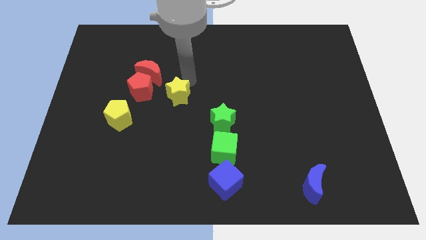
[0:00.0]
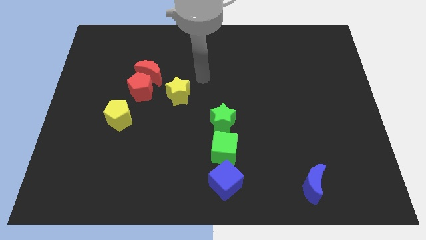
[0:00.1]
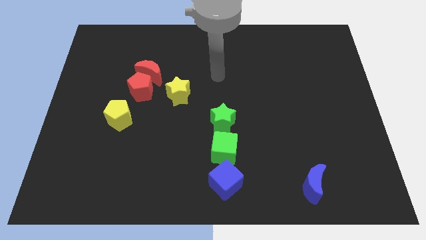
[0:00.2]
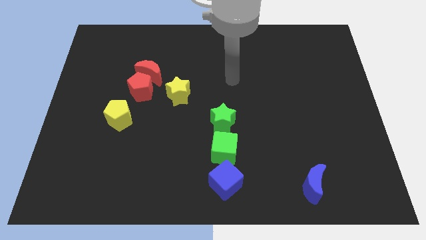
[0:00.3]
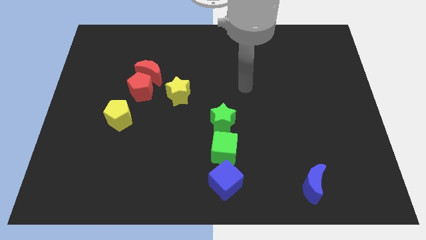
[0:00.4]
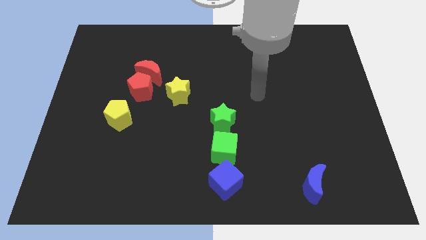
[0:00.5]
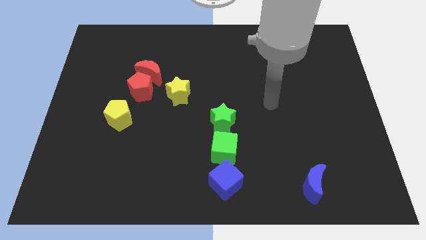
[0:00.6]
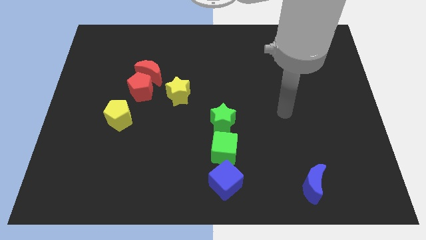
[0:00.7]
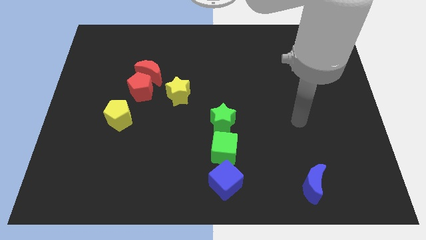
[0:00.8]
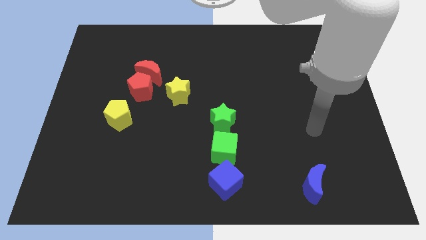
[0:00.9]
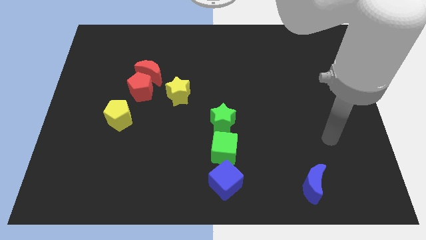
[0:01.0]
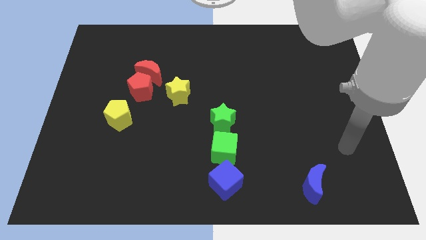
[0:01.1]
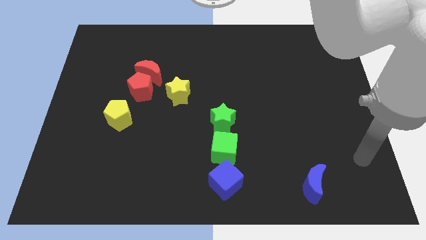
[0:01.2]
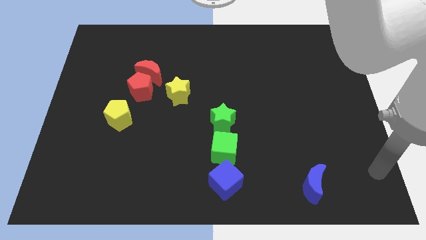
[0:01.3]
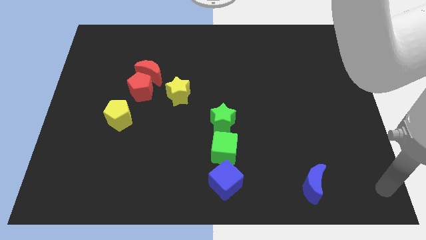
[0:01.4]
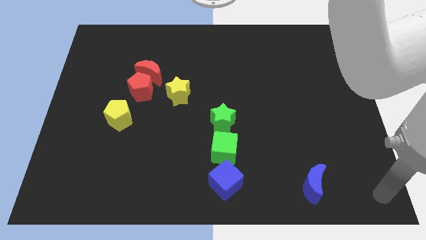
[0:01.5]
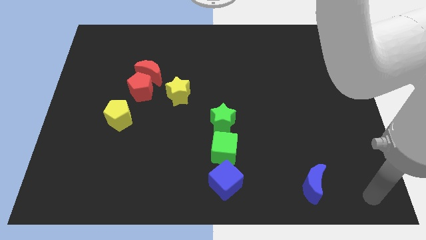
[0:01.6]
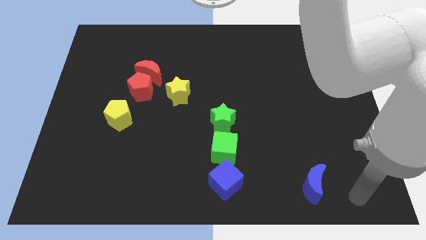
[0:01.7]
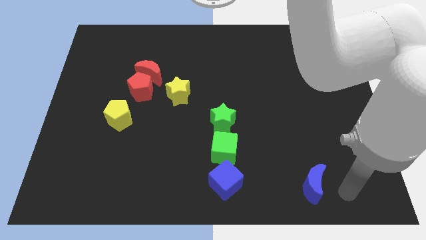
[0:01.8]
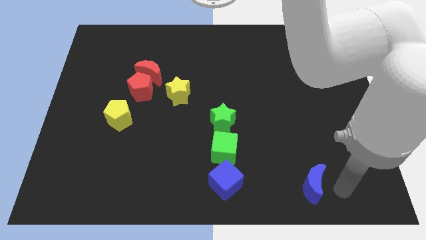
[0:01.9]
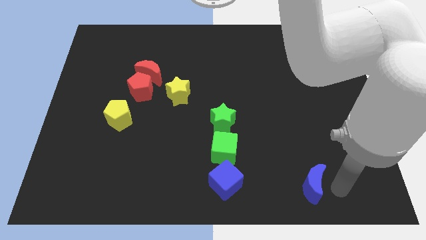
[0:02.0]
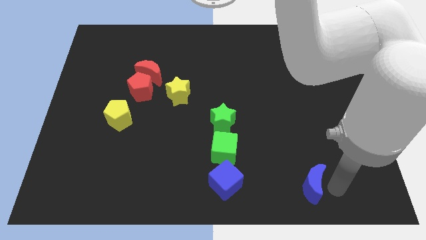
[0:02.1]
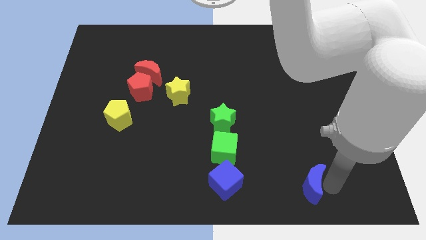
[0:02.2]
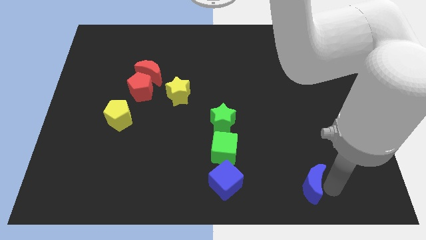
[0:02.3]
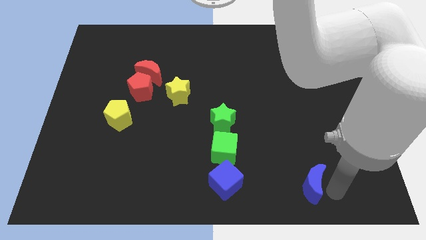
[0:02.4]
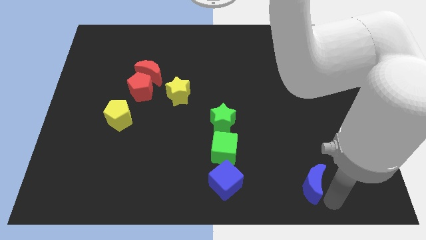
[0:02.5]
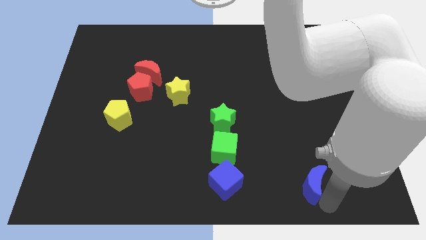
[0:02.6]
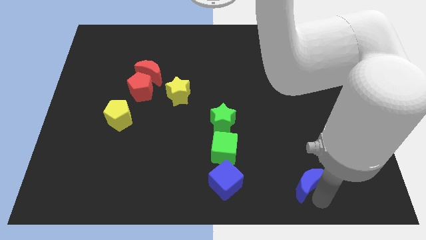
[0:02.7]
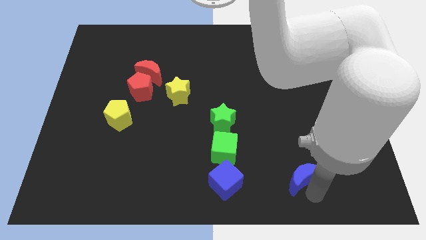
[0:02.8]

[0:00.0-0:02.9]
move your arm to the bottom of the blue crescent

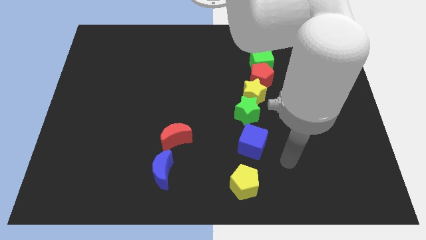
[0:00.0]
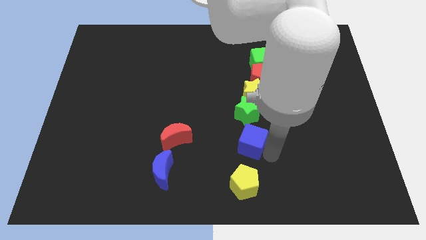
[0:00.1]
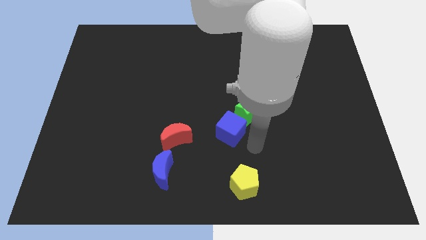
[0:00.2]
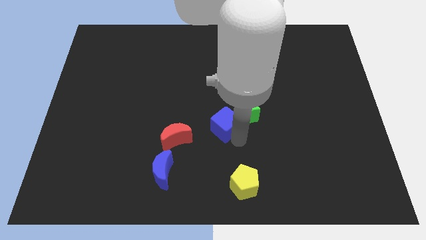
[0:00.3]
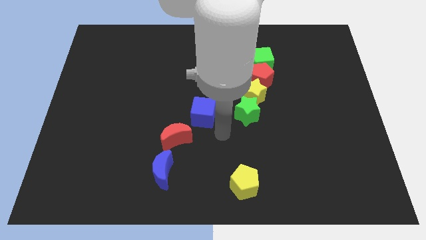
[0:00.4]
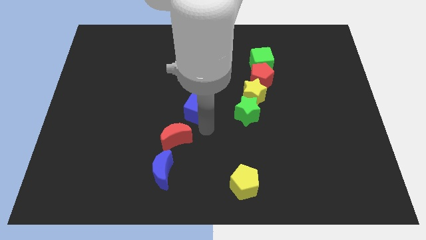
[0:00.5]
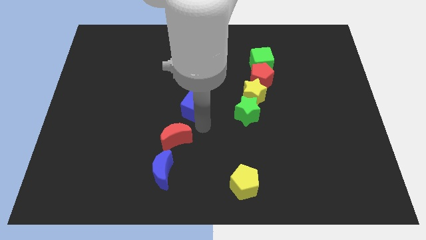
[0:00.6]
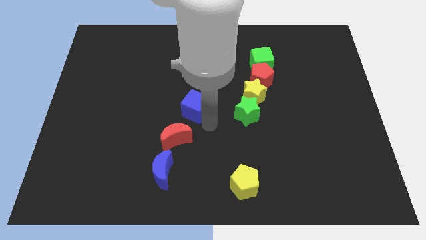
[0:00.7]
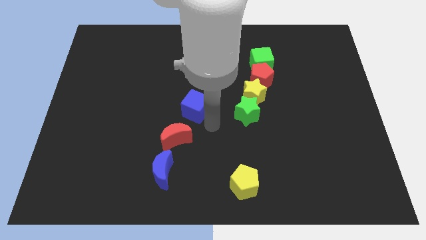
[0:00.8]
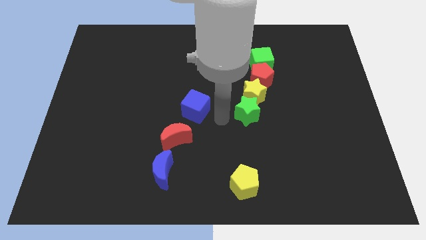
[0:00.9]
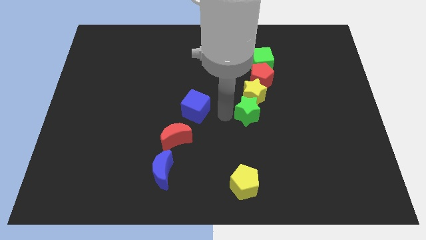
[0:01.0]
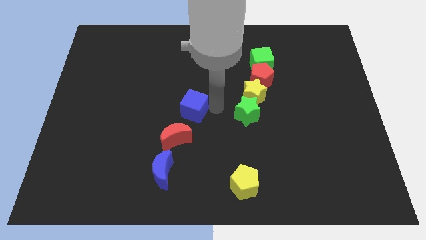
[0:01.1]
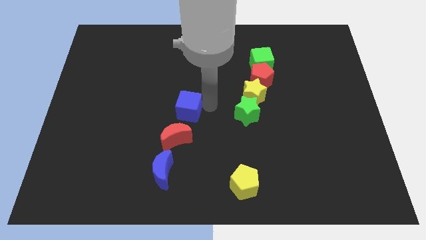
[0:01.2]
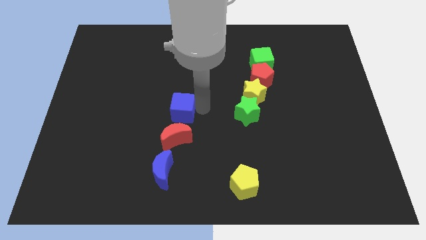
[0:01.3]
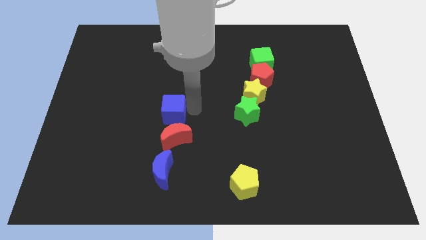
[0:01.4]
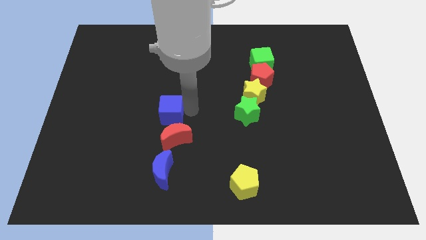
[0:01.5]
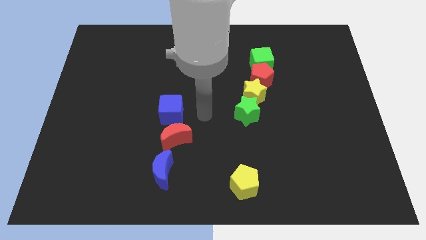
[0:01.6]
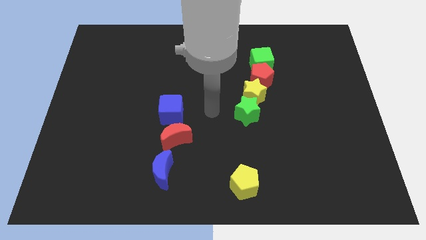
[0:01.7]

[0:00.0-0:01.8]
move the blue cube at the top side of the red crescent

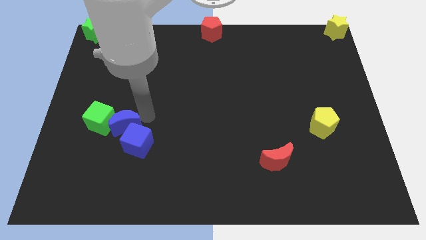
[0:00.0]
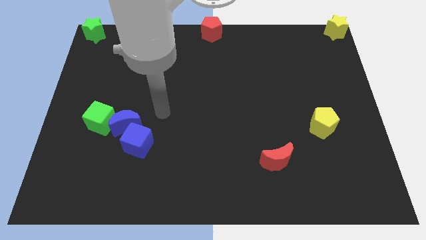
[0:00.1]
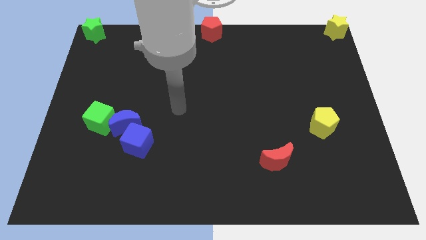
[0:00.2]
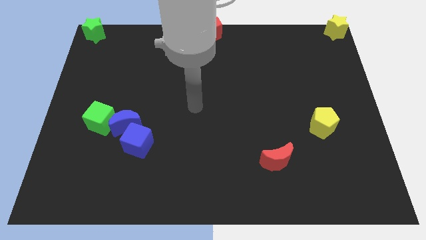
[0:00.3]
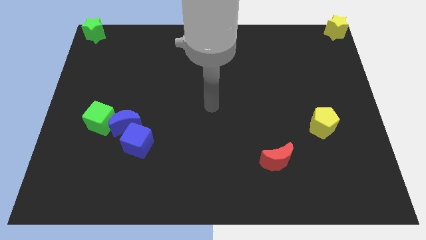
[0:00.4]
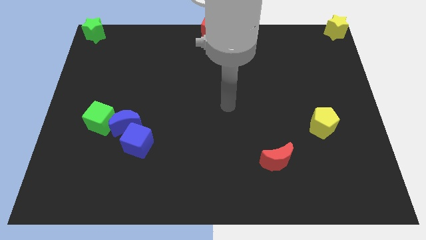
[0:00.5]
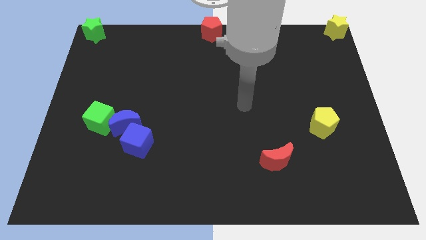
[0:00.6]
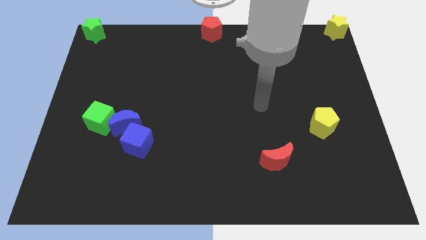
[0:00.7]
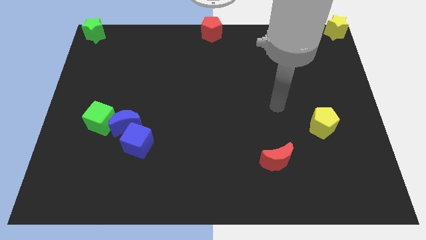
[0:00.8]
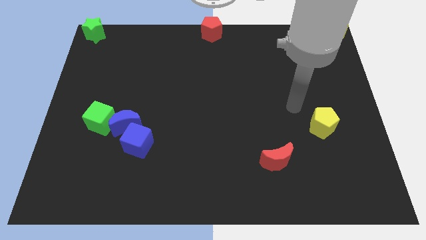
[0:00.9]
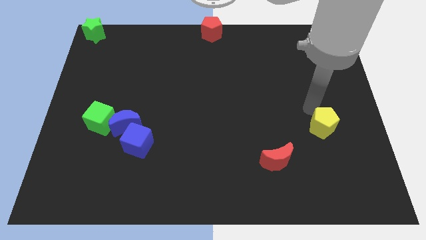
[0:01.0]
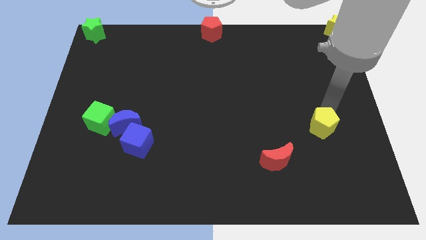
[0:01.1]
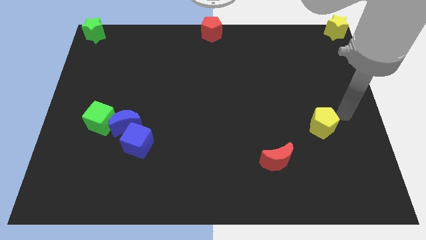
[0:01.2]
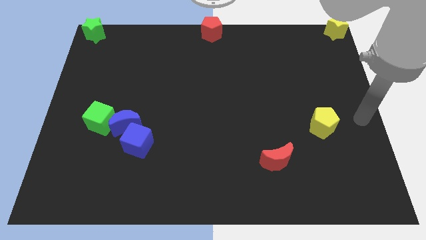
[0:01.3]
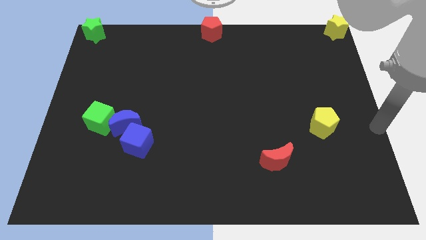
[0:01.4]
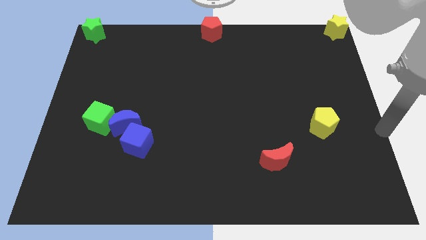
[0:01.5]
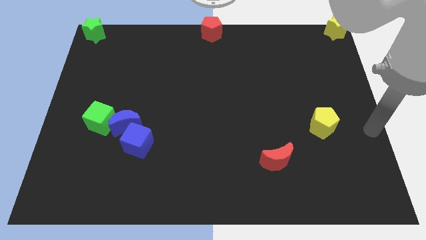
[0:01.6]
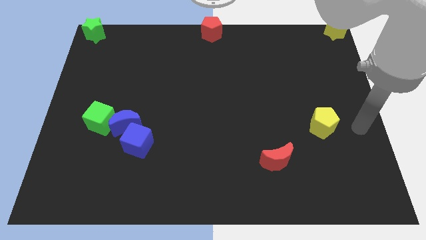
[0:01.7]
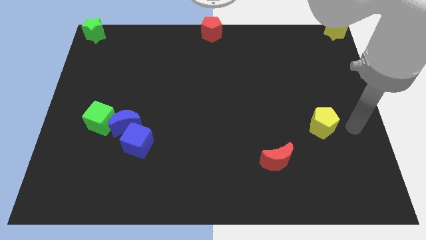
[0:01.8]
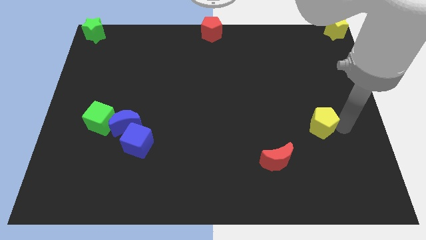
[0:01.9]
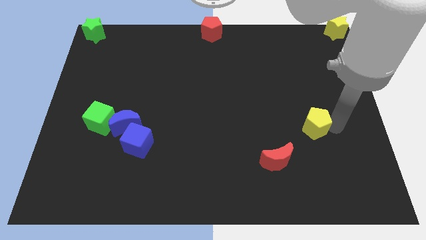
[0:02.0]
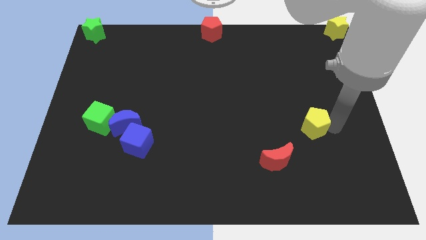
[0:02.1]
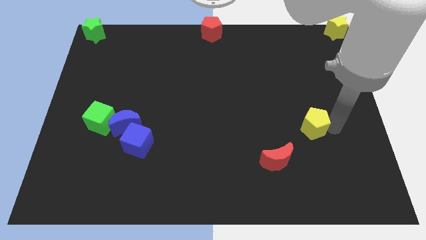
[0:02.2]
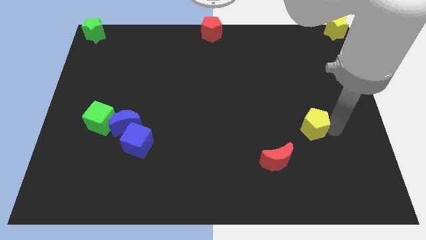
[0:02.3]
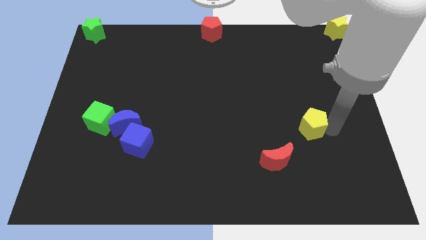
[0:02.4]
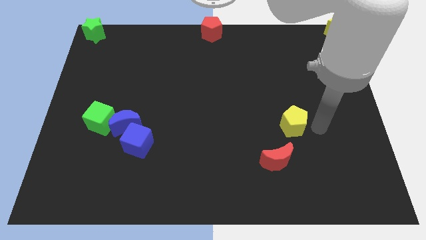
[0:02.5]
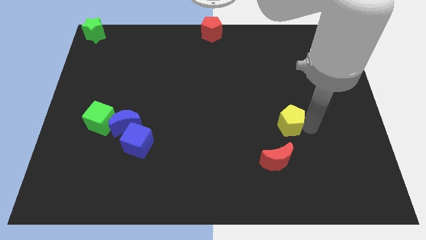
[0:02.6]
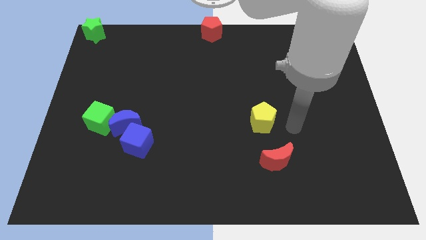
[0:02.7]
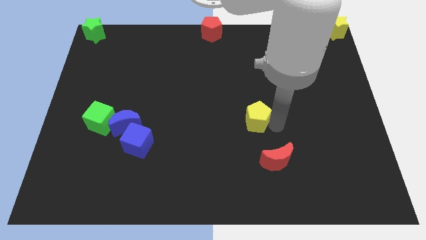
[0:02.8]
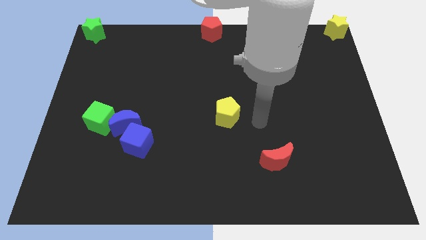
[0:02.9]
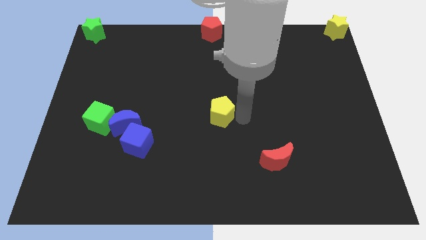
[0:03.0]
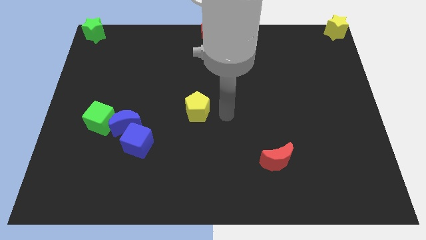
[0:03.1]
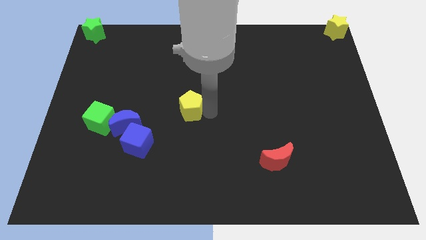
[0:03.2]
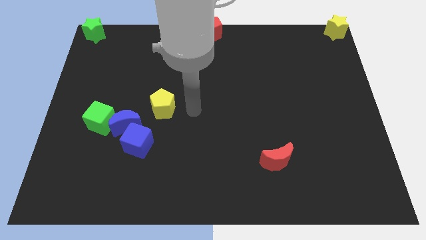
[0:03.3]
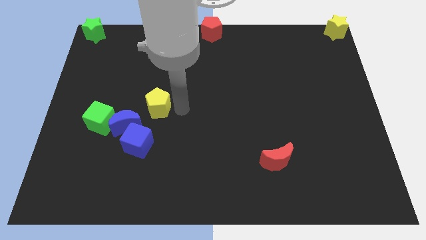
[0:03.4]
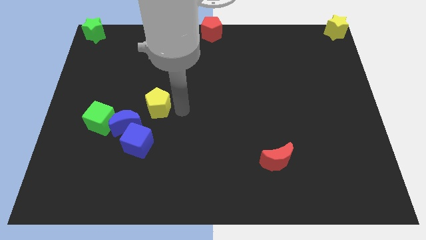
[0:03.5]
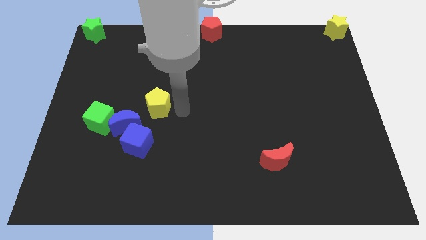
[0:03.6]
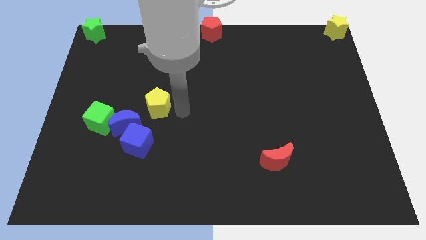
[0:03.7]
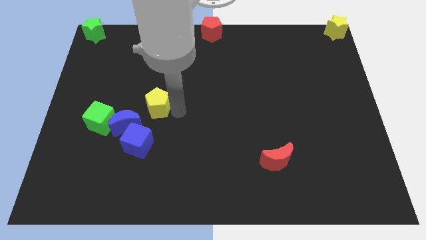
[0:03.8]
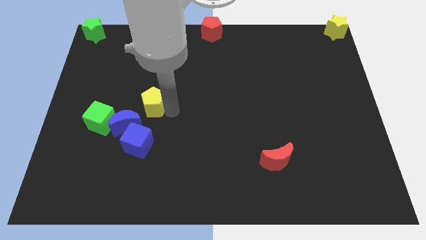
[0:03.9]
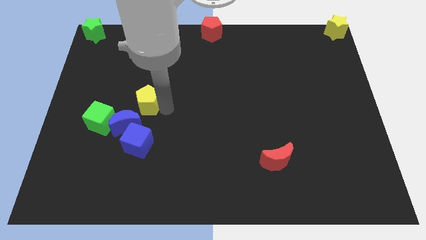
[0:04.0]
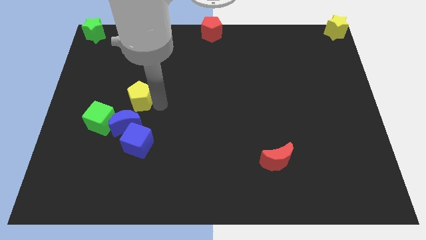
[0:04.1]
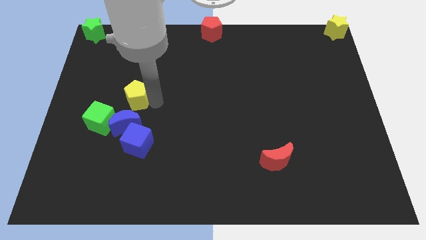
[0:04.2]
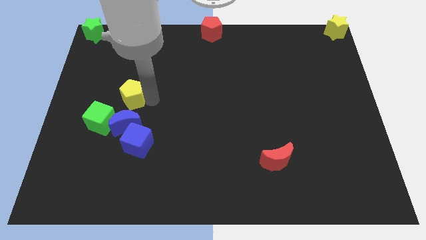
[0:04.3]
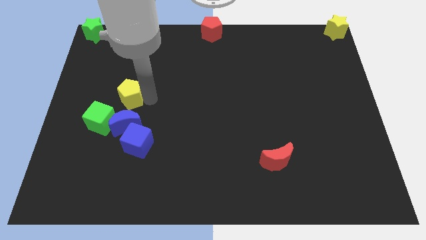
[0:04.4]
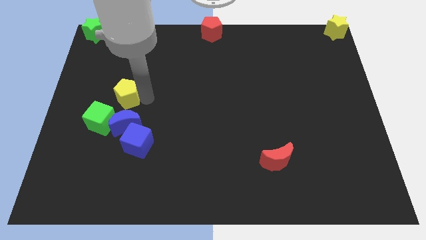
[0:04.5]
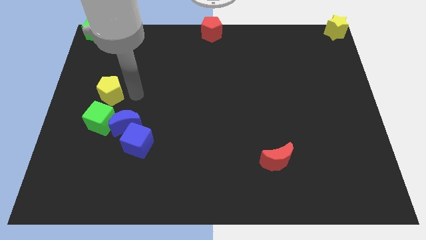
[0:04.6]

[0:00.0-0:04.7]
put the yellow pentagon above the blue moon
